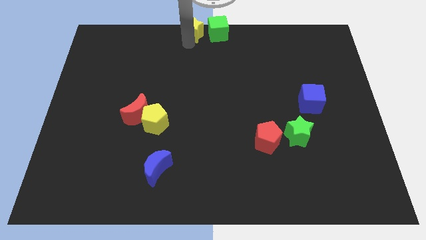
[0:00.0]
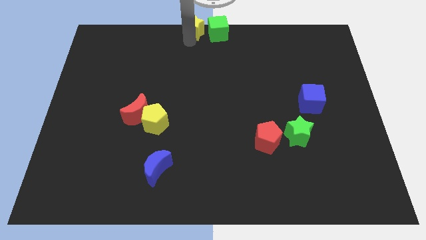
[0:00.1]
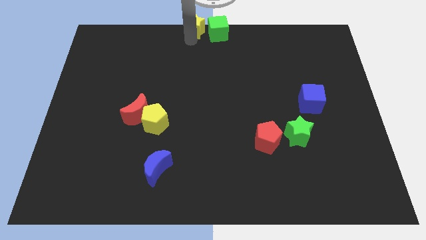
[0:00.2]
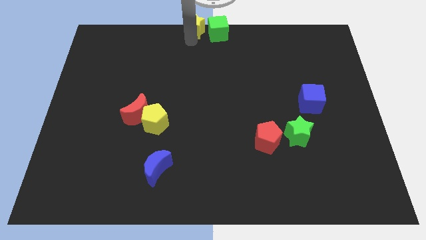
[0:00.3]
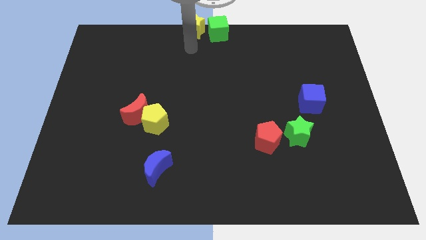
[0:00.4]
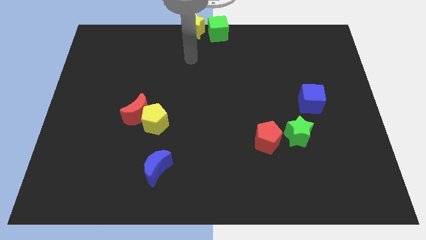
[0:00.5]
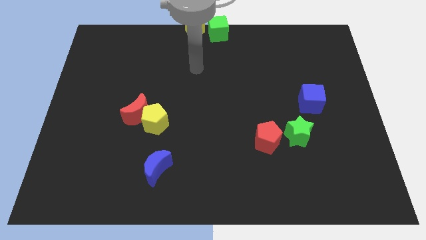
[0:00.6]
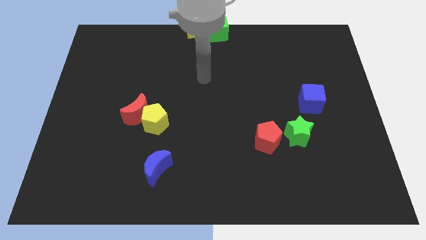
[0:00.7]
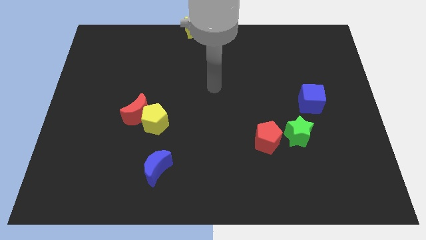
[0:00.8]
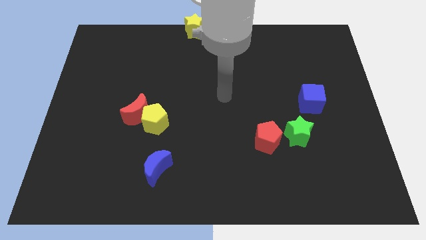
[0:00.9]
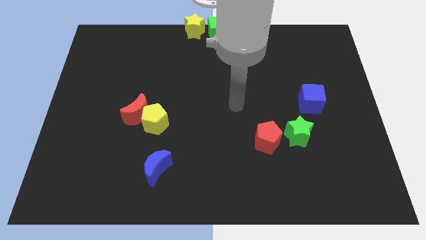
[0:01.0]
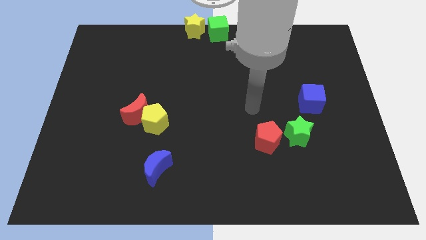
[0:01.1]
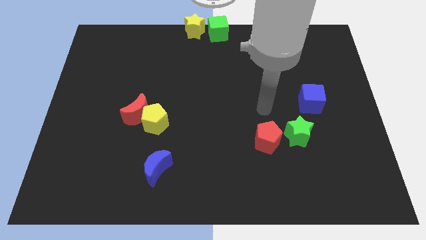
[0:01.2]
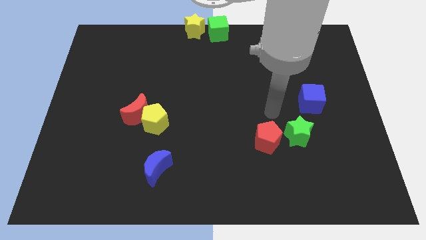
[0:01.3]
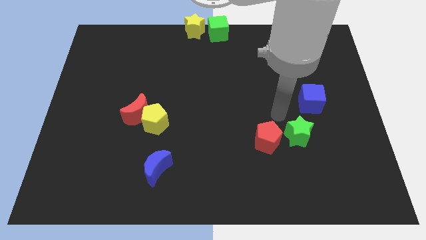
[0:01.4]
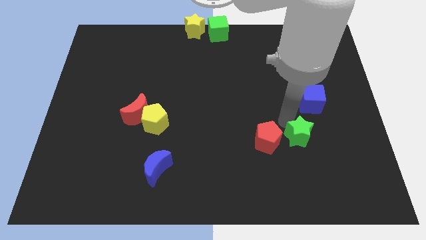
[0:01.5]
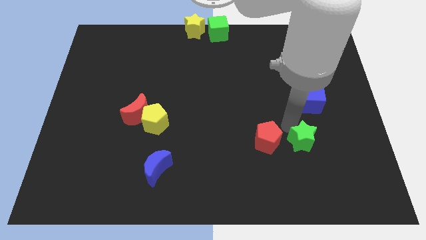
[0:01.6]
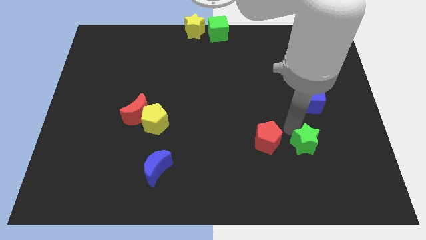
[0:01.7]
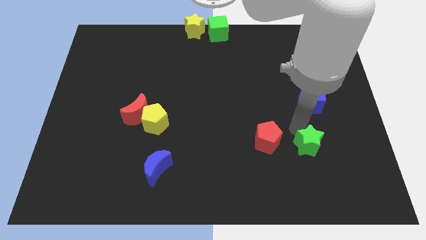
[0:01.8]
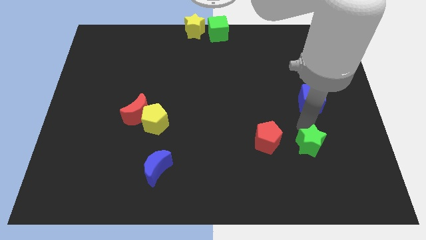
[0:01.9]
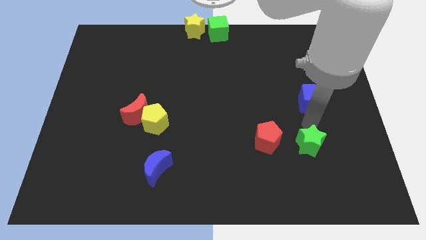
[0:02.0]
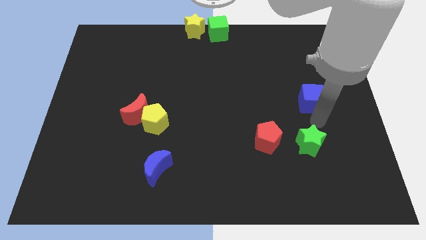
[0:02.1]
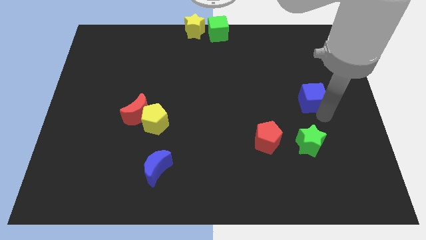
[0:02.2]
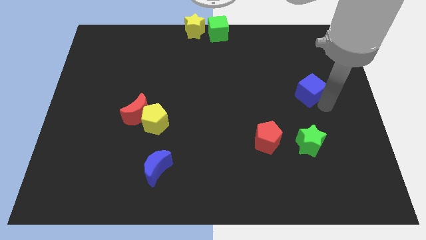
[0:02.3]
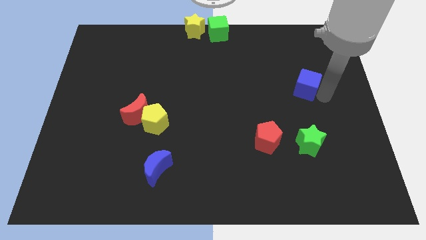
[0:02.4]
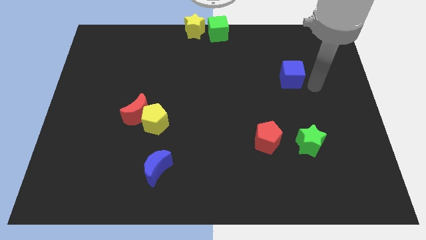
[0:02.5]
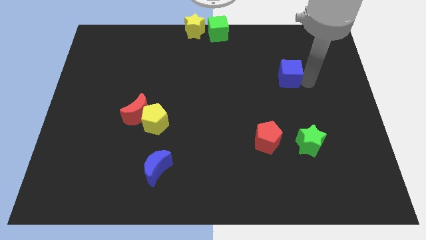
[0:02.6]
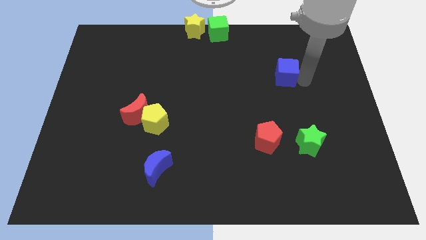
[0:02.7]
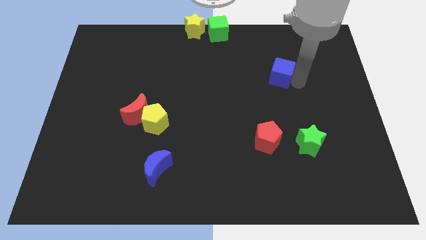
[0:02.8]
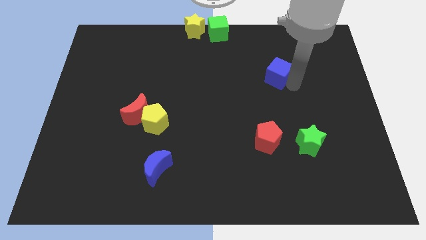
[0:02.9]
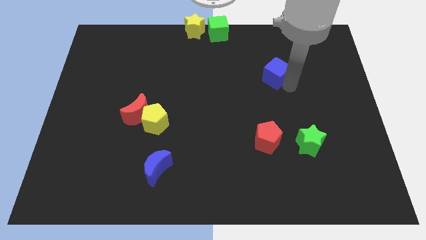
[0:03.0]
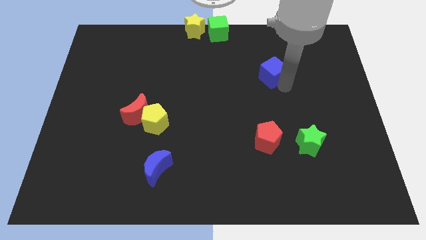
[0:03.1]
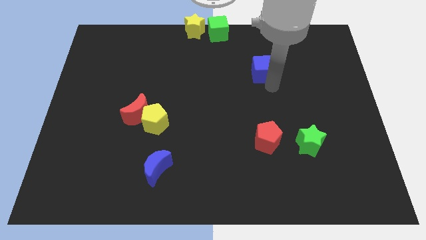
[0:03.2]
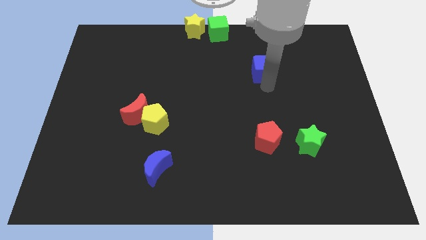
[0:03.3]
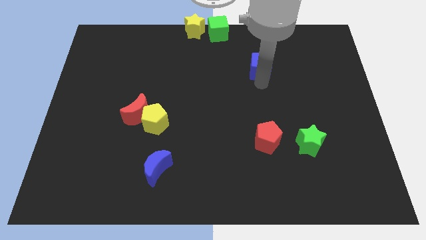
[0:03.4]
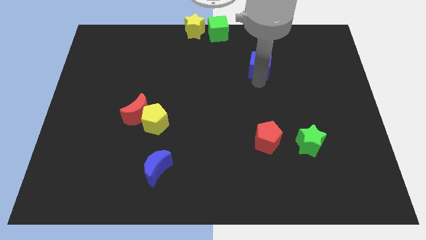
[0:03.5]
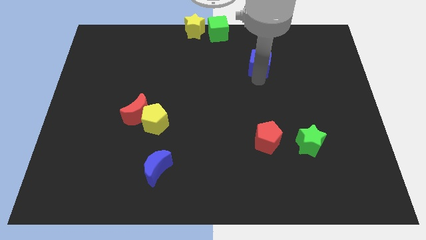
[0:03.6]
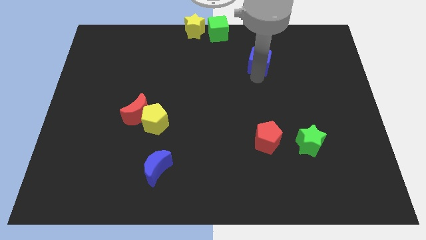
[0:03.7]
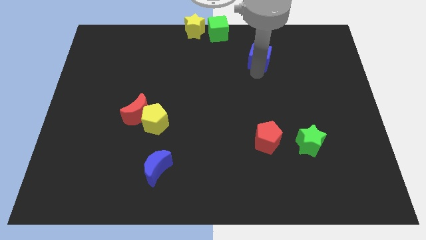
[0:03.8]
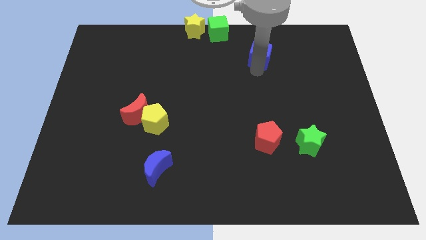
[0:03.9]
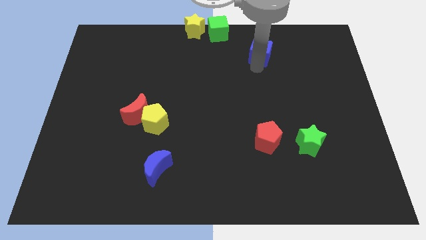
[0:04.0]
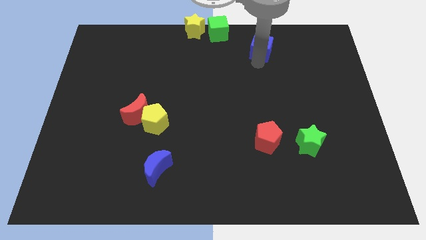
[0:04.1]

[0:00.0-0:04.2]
move blue cube towards the top

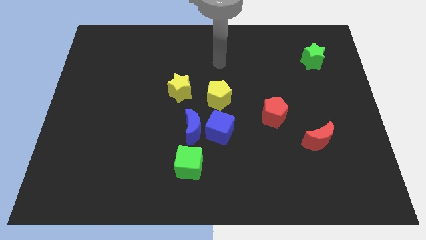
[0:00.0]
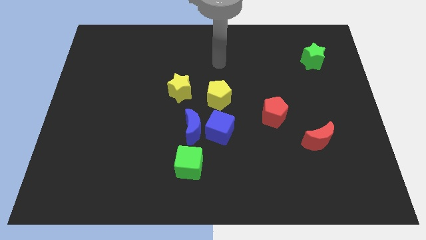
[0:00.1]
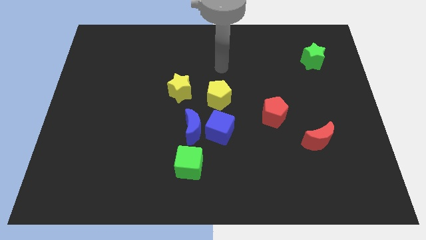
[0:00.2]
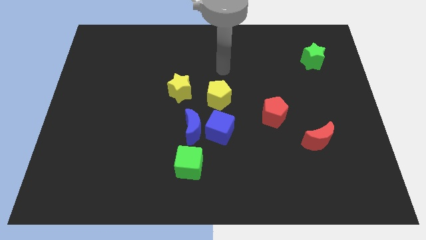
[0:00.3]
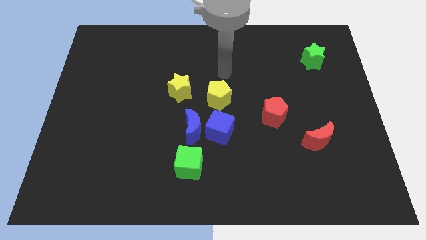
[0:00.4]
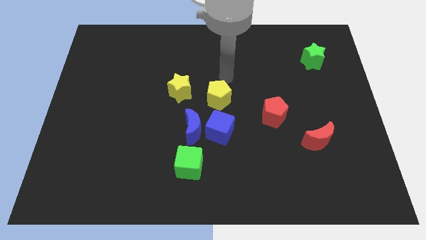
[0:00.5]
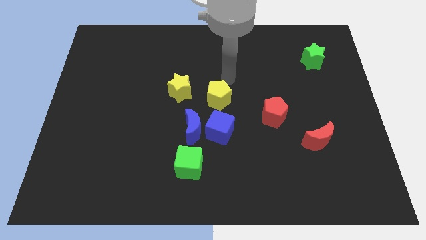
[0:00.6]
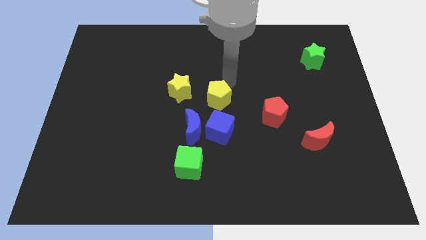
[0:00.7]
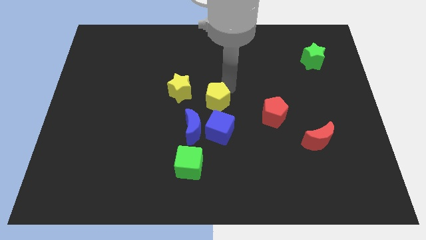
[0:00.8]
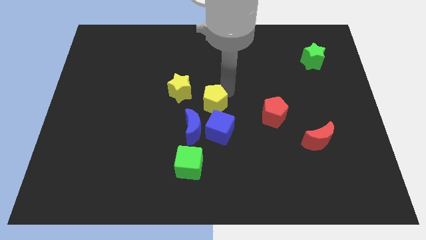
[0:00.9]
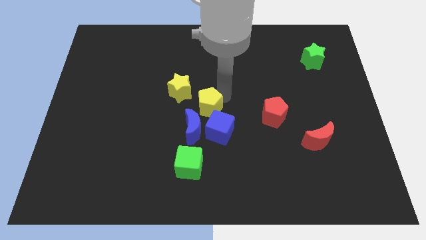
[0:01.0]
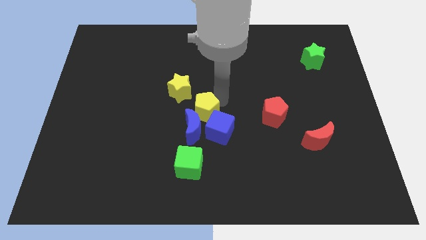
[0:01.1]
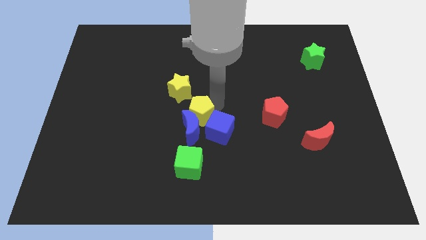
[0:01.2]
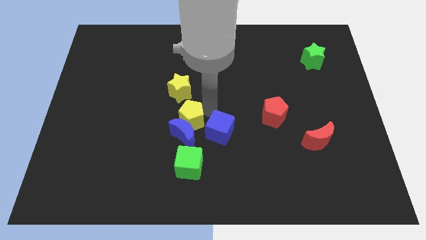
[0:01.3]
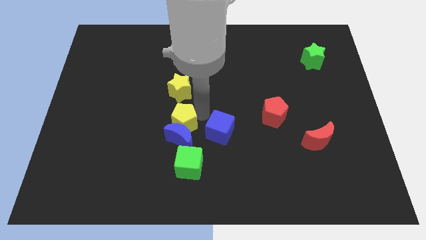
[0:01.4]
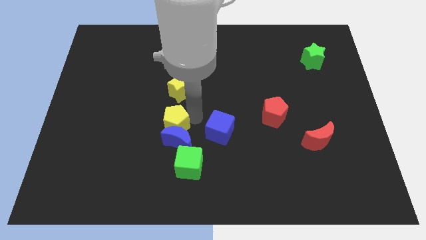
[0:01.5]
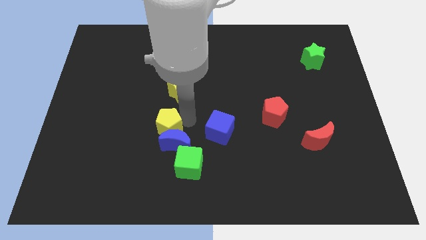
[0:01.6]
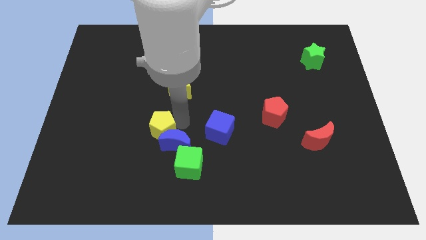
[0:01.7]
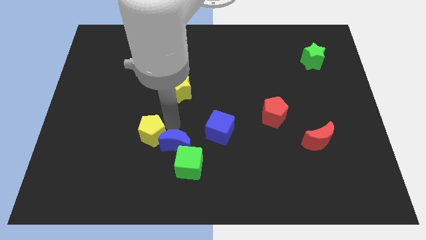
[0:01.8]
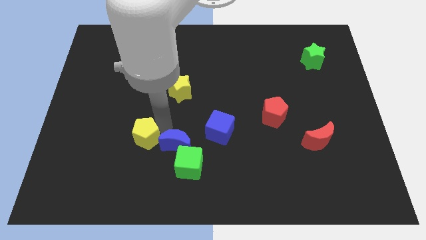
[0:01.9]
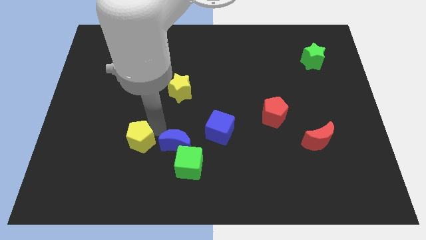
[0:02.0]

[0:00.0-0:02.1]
place yellow pentagon to the left of blue moon

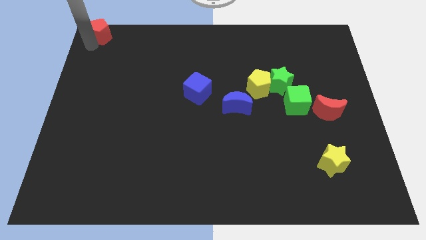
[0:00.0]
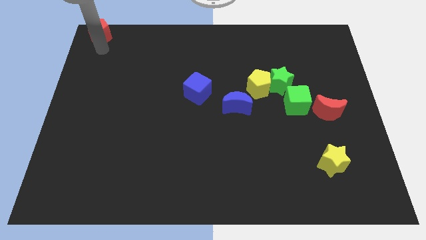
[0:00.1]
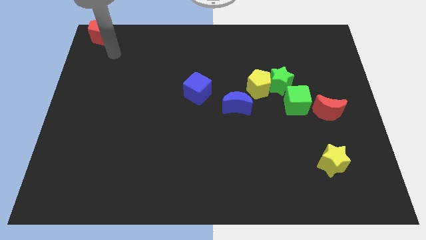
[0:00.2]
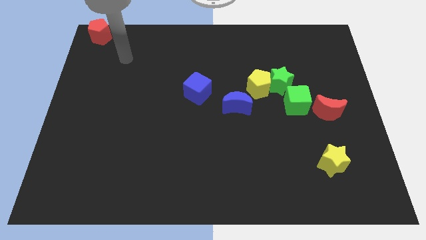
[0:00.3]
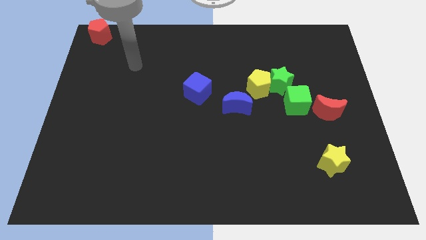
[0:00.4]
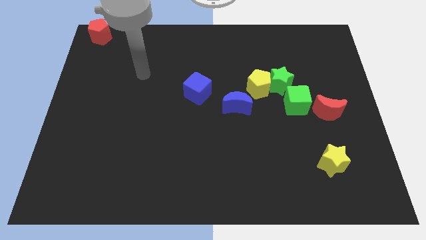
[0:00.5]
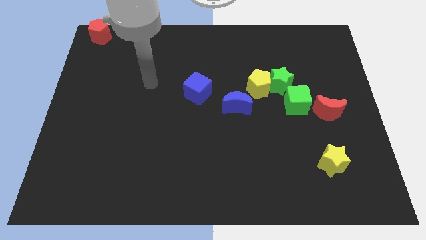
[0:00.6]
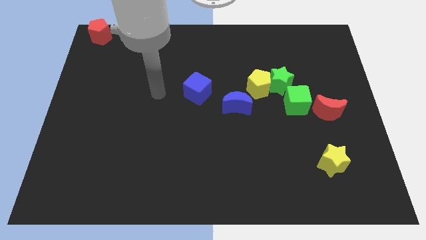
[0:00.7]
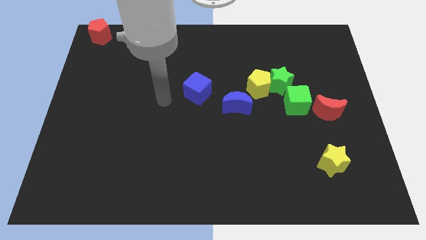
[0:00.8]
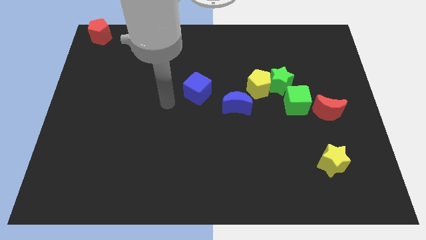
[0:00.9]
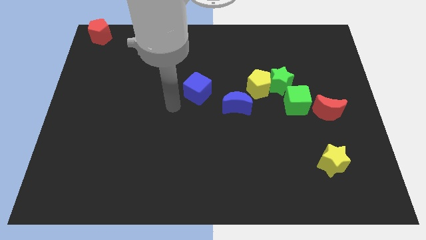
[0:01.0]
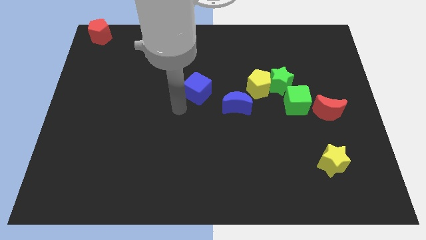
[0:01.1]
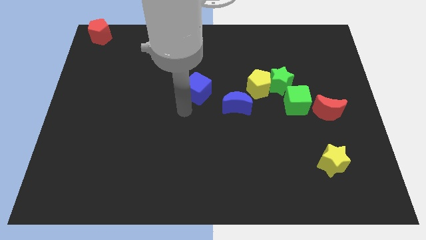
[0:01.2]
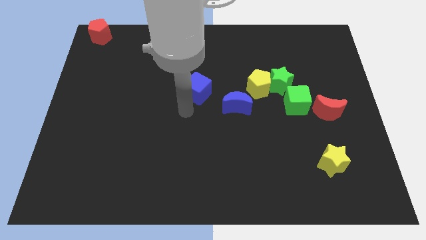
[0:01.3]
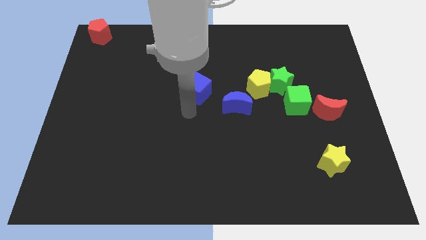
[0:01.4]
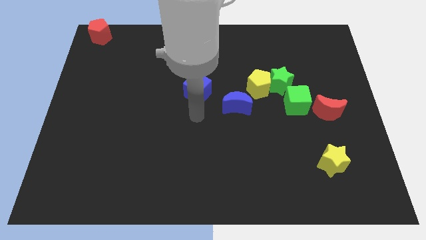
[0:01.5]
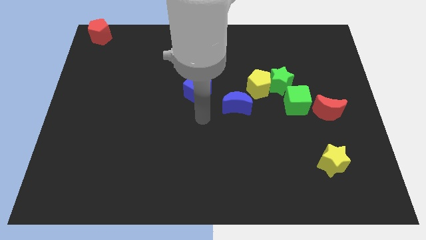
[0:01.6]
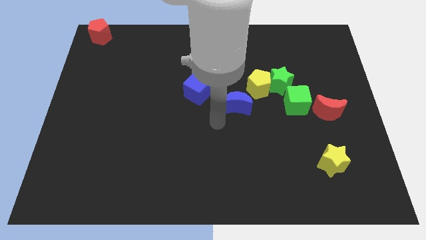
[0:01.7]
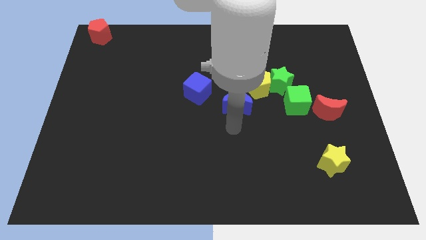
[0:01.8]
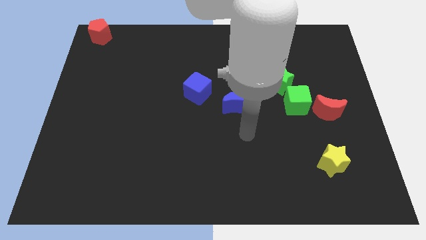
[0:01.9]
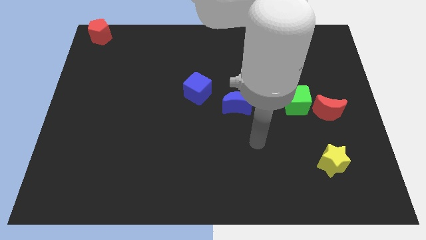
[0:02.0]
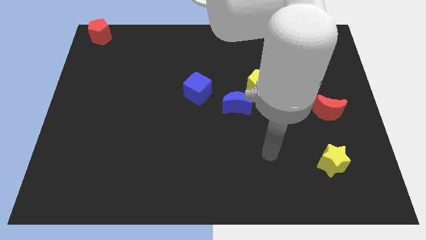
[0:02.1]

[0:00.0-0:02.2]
move the arm away from the red pentagon

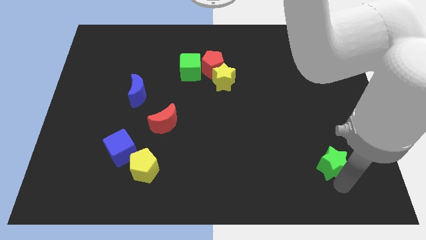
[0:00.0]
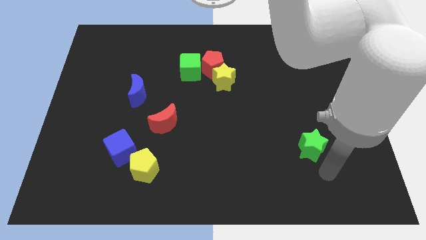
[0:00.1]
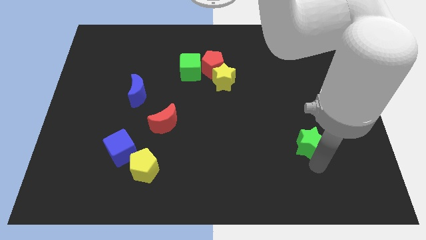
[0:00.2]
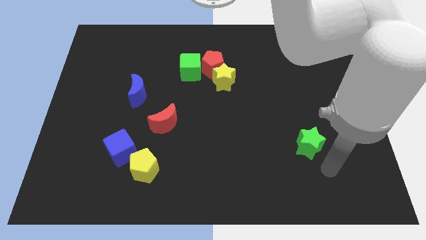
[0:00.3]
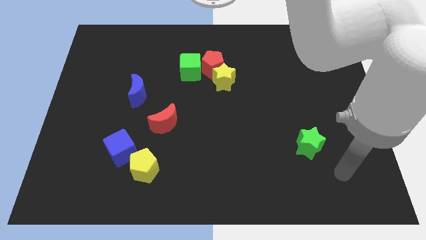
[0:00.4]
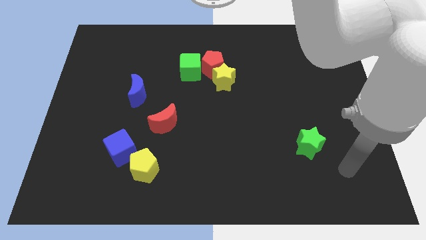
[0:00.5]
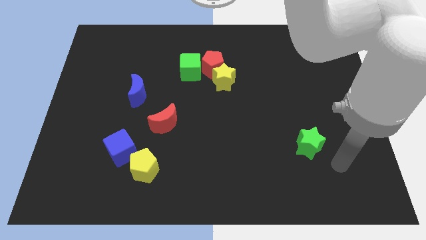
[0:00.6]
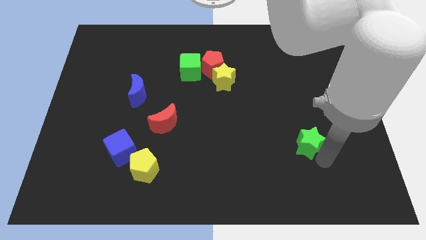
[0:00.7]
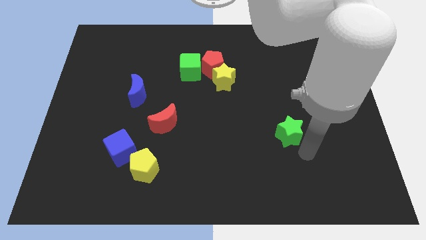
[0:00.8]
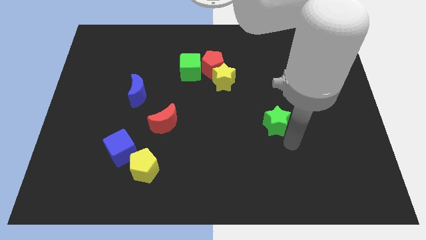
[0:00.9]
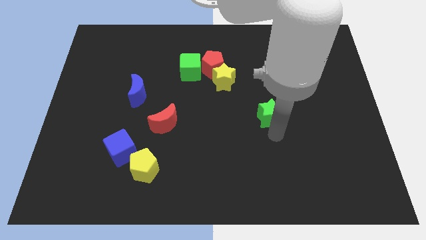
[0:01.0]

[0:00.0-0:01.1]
push the green star parallel to the red crescent
